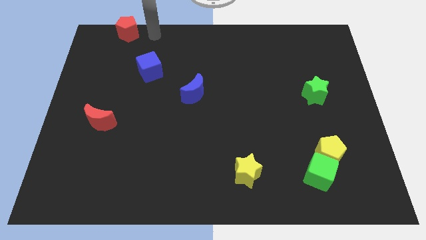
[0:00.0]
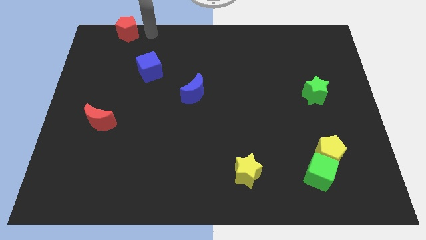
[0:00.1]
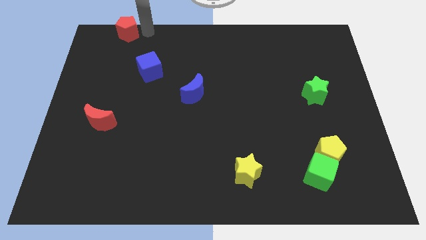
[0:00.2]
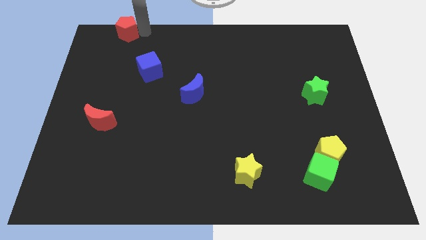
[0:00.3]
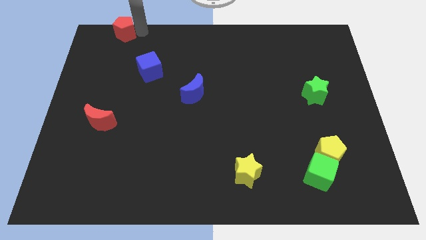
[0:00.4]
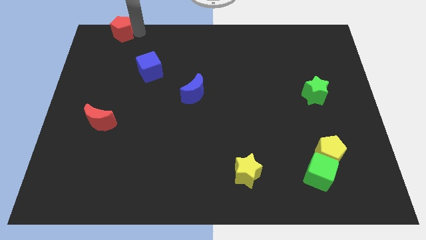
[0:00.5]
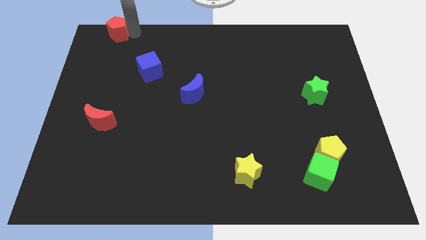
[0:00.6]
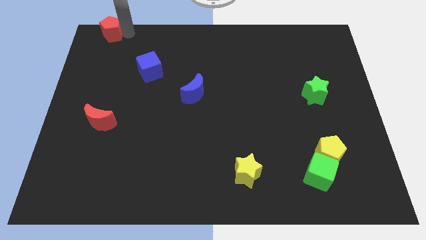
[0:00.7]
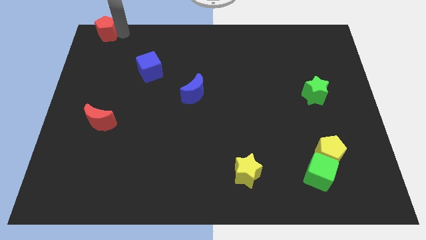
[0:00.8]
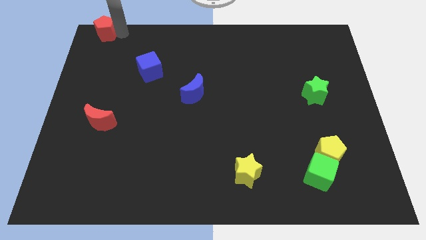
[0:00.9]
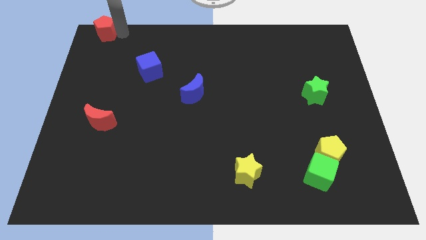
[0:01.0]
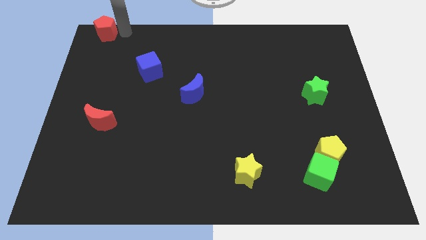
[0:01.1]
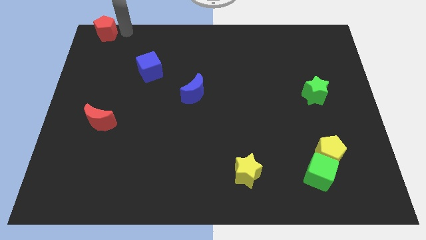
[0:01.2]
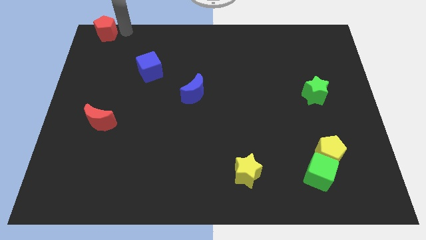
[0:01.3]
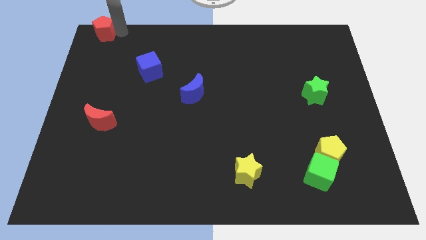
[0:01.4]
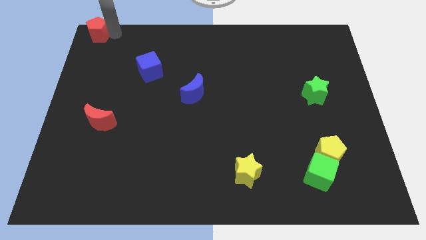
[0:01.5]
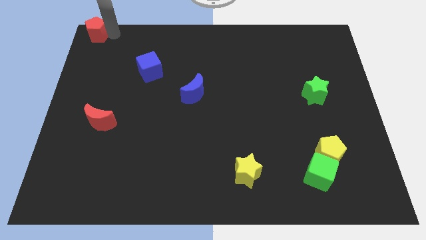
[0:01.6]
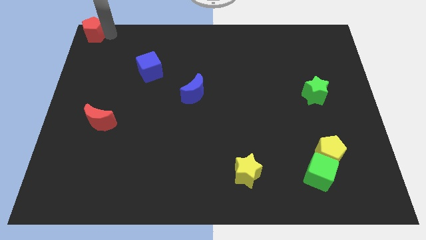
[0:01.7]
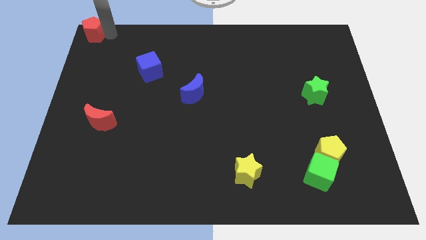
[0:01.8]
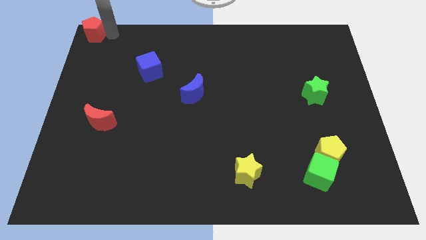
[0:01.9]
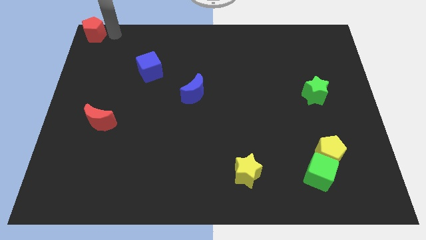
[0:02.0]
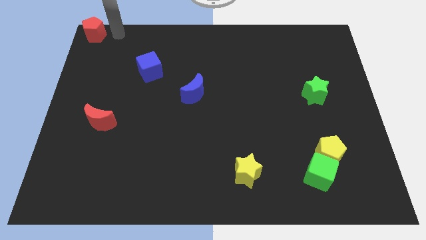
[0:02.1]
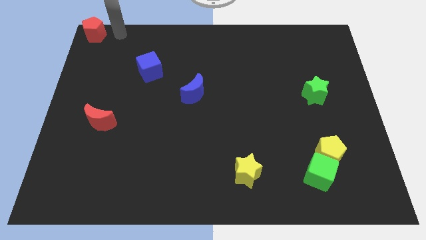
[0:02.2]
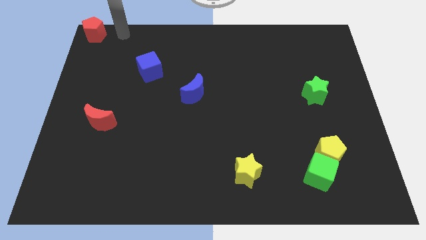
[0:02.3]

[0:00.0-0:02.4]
push the red pentagon to the top left corner of the board

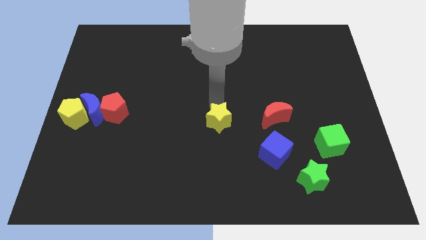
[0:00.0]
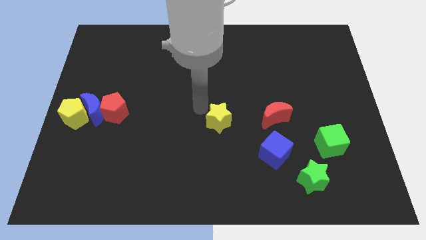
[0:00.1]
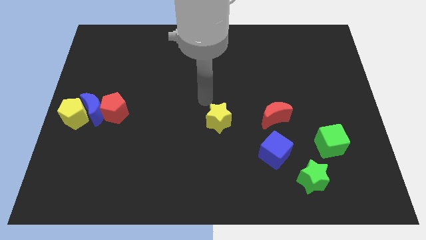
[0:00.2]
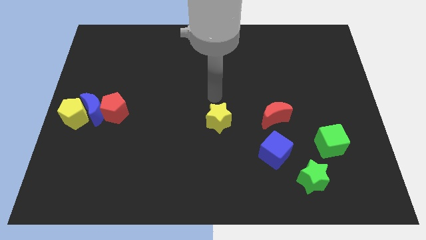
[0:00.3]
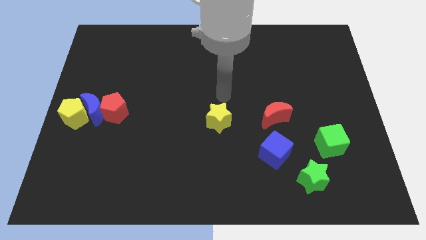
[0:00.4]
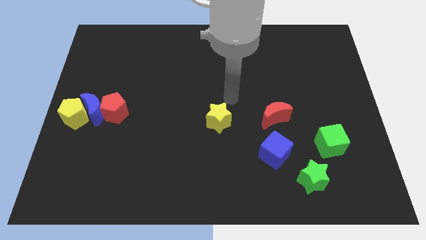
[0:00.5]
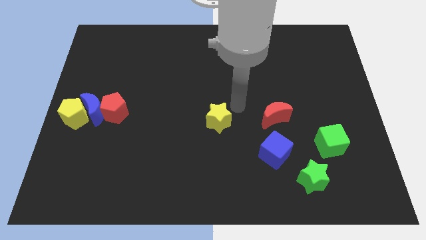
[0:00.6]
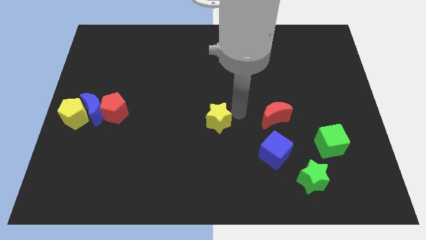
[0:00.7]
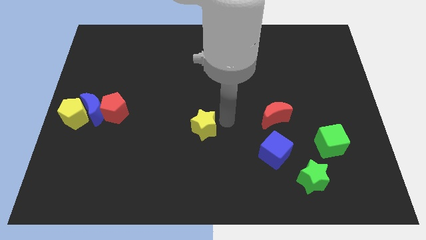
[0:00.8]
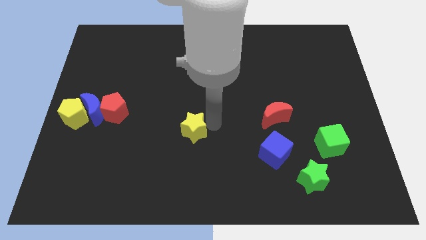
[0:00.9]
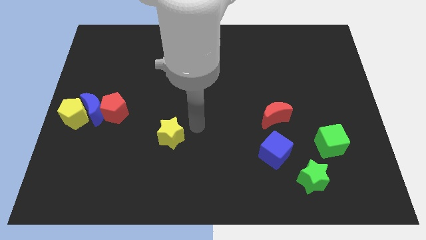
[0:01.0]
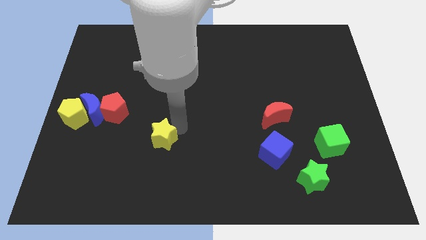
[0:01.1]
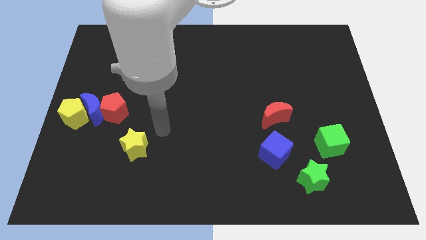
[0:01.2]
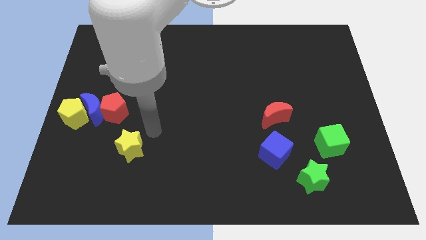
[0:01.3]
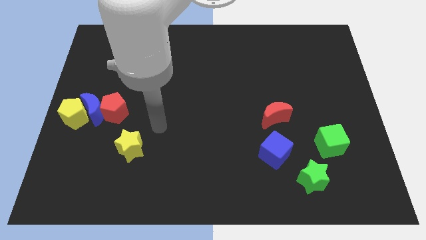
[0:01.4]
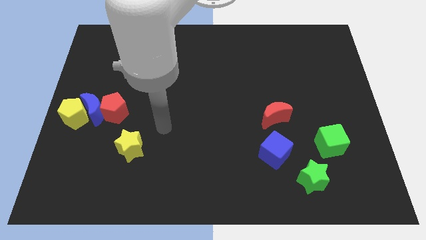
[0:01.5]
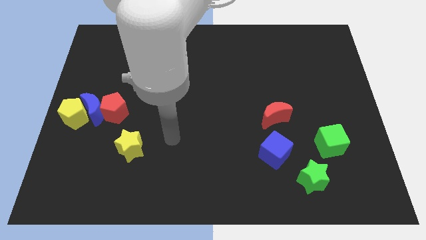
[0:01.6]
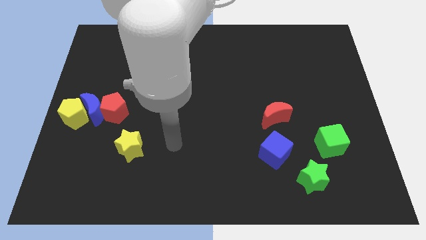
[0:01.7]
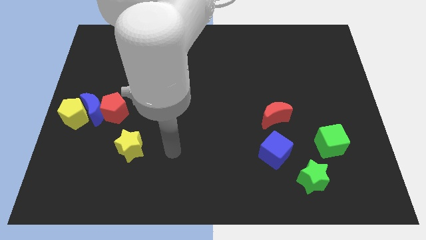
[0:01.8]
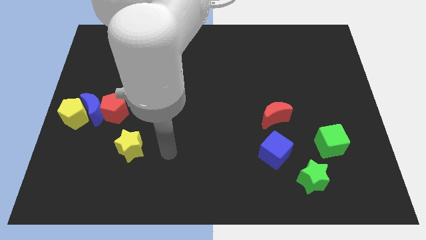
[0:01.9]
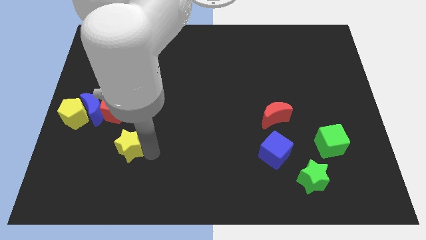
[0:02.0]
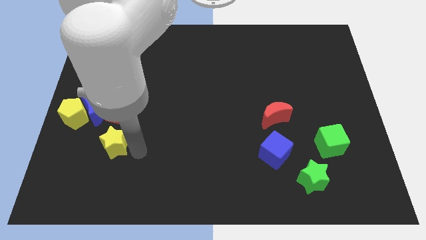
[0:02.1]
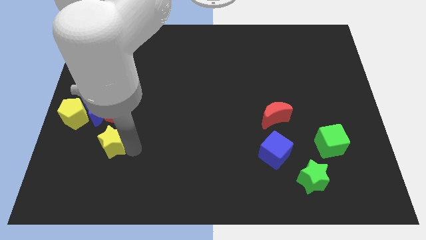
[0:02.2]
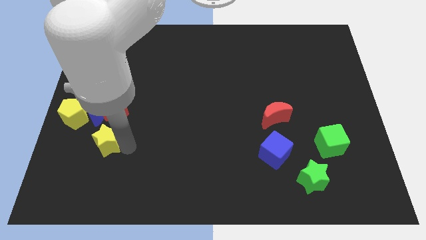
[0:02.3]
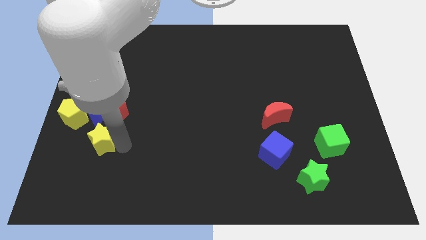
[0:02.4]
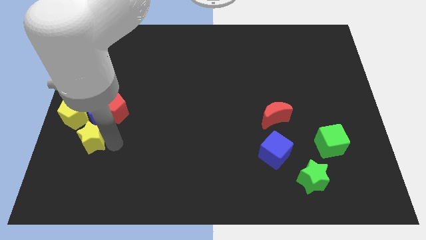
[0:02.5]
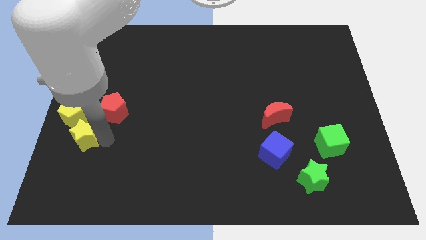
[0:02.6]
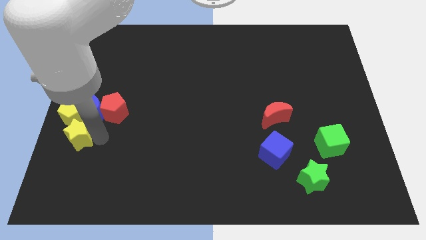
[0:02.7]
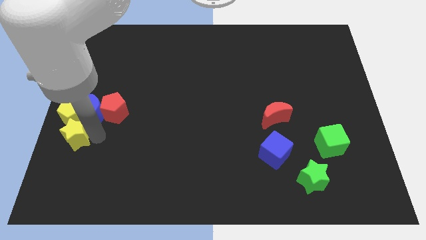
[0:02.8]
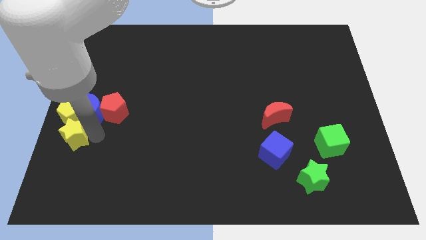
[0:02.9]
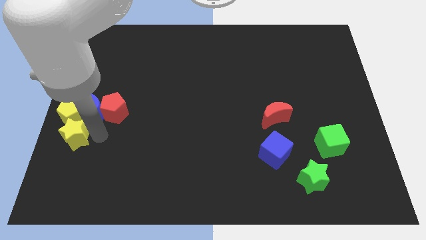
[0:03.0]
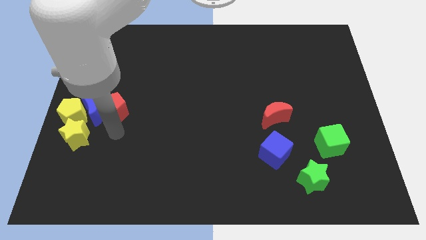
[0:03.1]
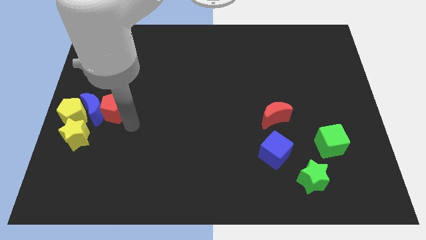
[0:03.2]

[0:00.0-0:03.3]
push the yellow star into the yellow pentagon

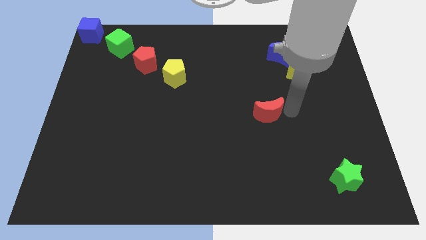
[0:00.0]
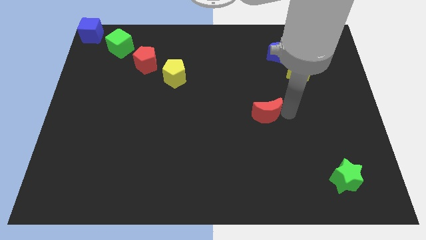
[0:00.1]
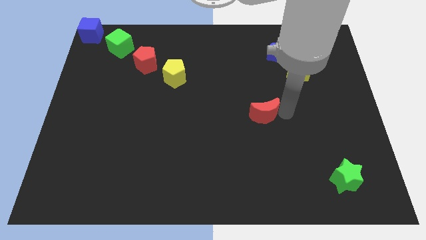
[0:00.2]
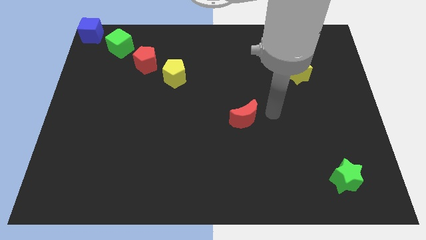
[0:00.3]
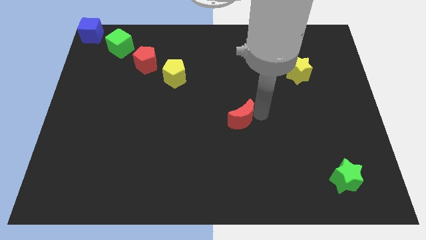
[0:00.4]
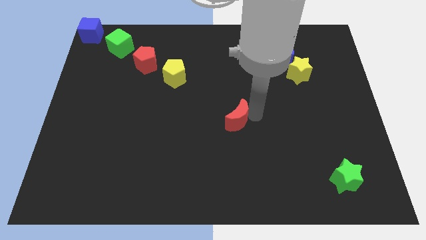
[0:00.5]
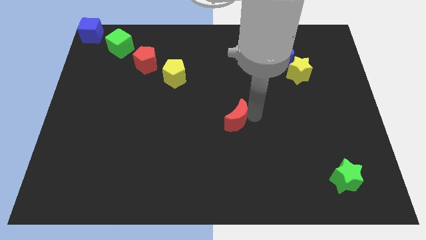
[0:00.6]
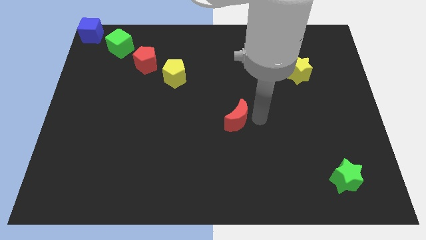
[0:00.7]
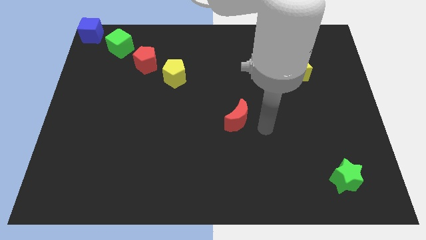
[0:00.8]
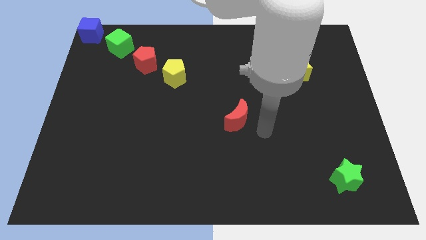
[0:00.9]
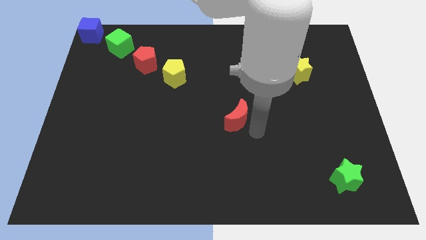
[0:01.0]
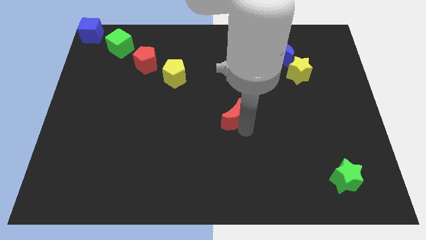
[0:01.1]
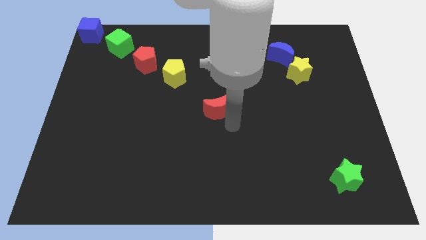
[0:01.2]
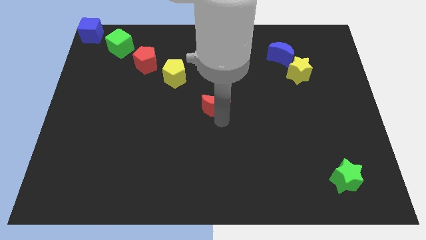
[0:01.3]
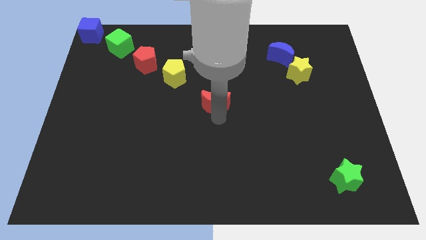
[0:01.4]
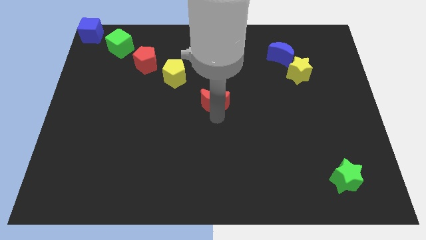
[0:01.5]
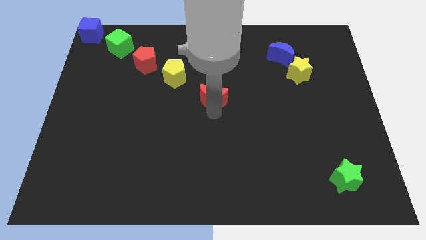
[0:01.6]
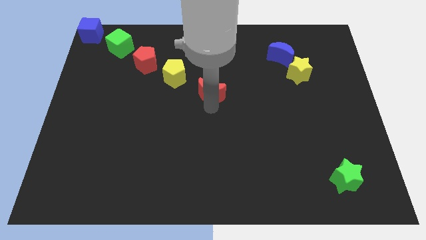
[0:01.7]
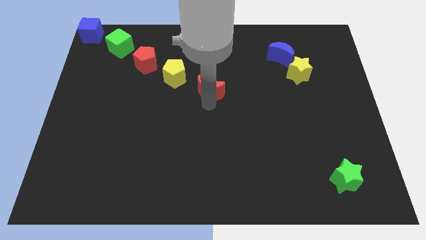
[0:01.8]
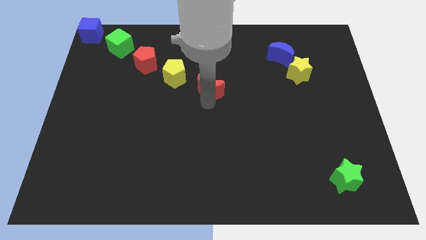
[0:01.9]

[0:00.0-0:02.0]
move the red moon diagonal to the yellow pentagon

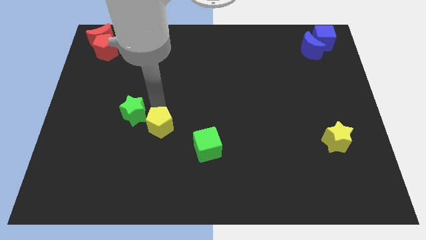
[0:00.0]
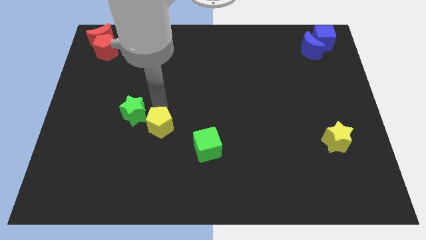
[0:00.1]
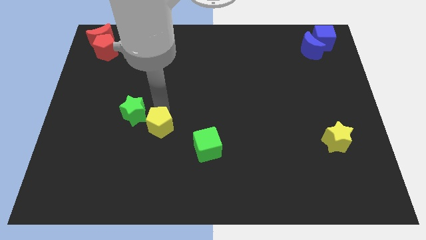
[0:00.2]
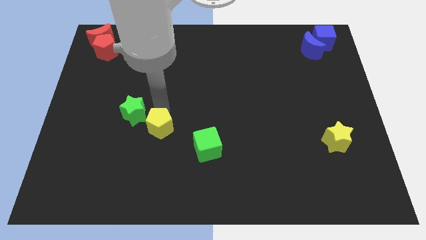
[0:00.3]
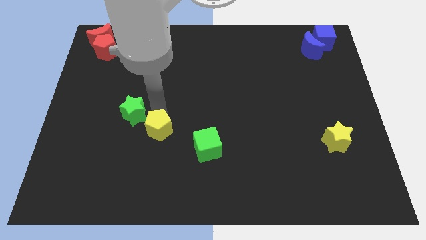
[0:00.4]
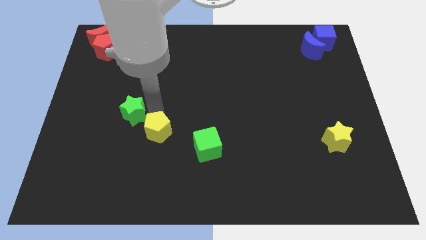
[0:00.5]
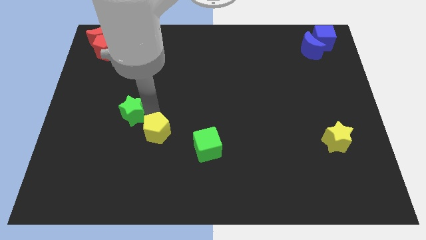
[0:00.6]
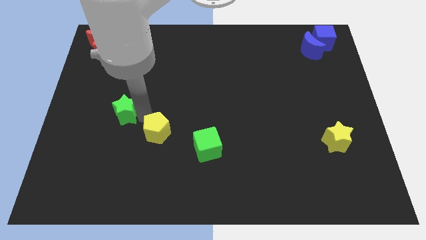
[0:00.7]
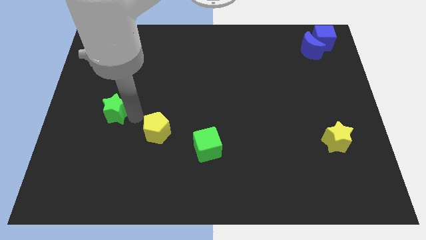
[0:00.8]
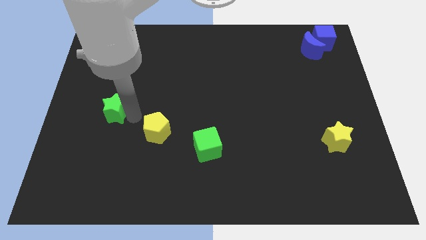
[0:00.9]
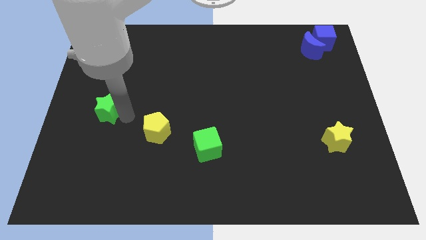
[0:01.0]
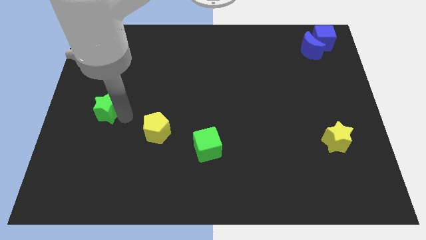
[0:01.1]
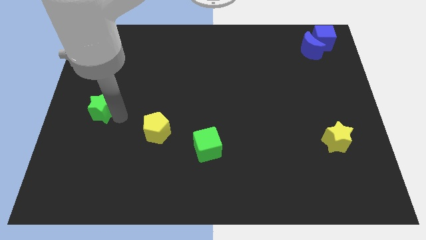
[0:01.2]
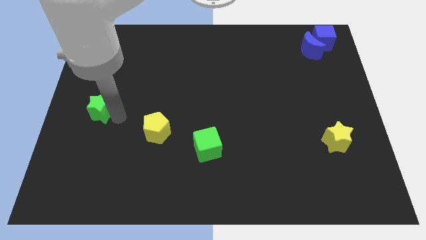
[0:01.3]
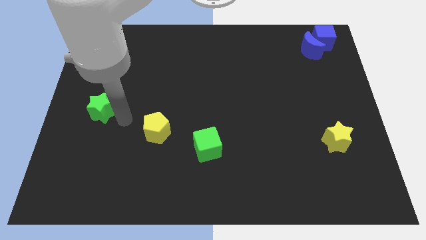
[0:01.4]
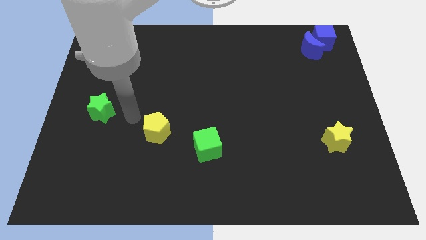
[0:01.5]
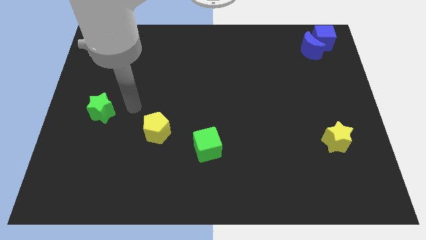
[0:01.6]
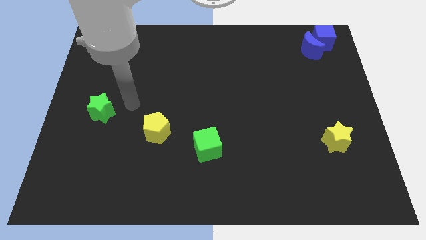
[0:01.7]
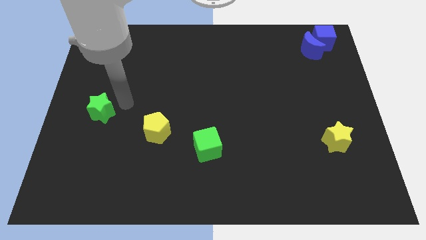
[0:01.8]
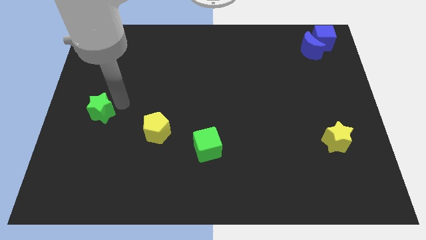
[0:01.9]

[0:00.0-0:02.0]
push the green star and yellow pentagon apart
